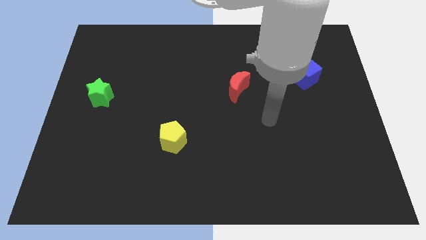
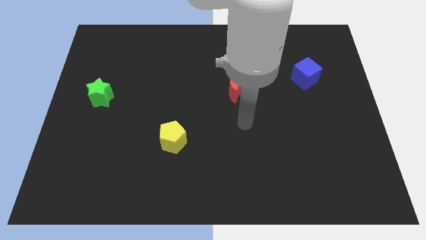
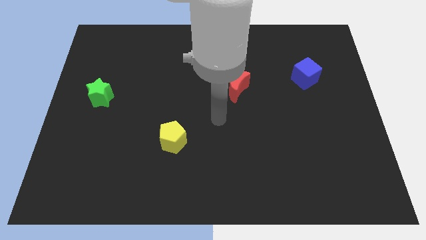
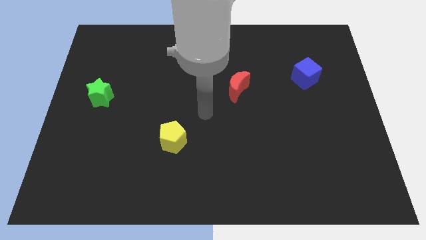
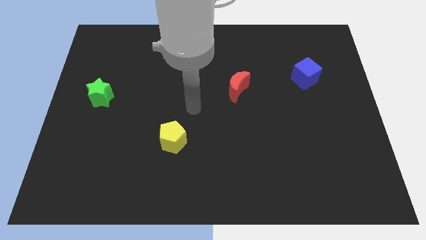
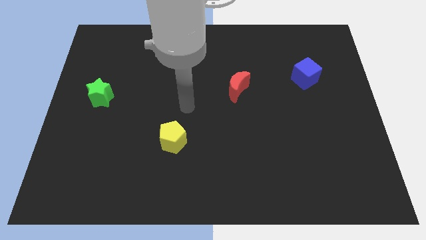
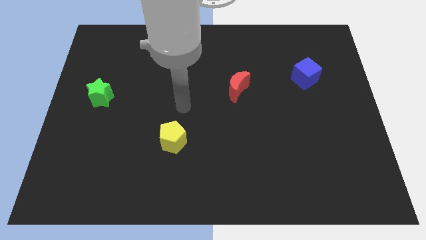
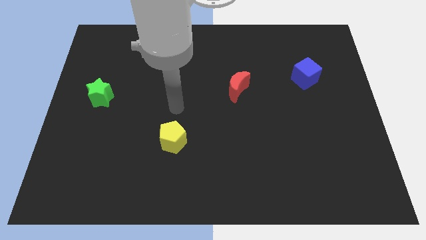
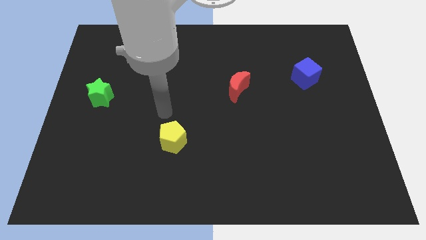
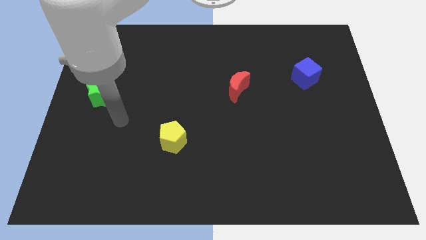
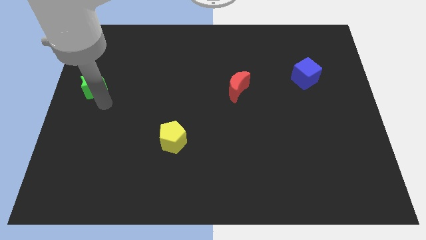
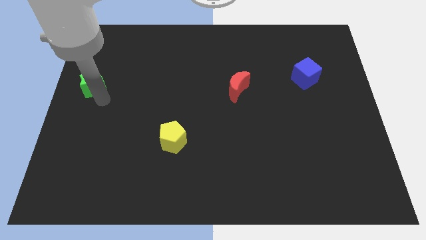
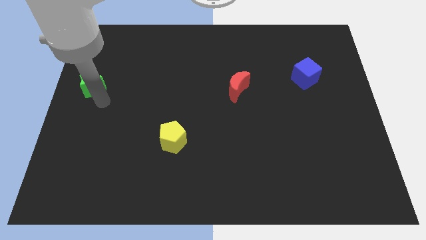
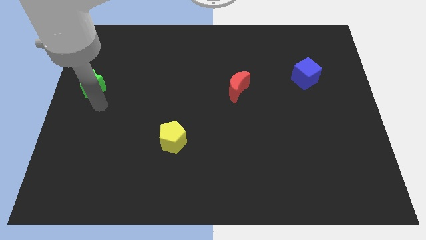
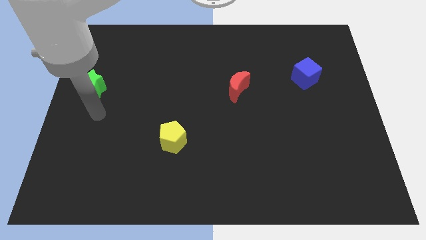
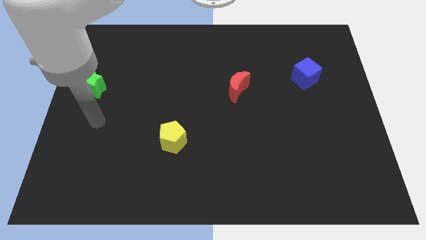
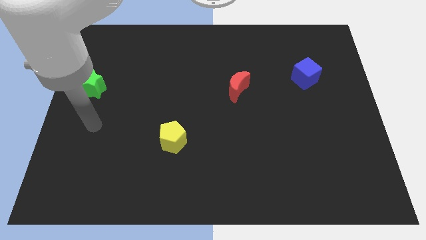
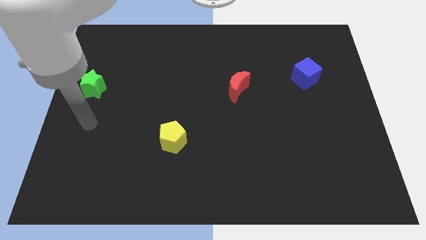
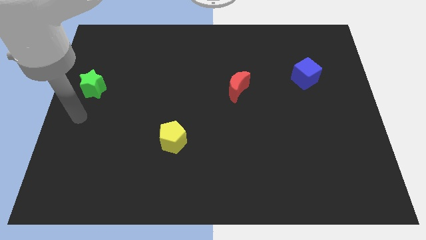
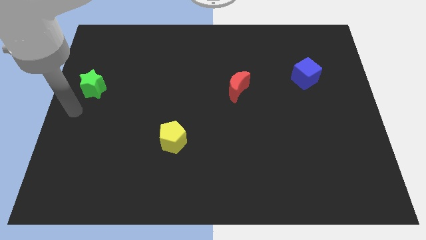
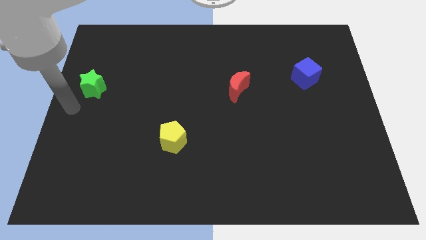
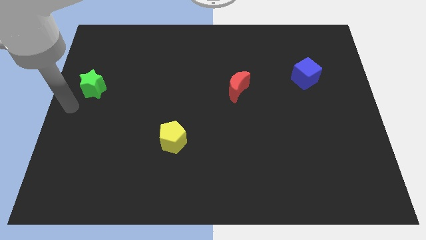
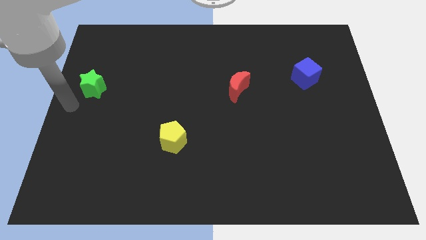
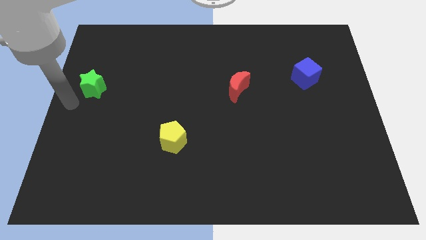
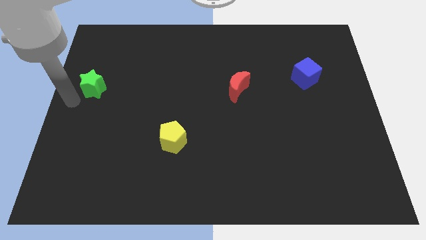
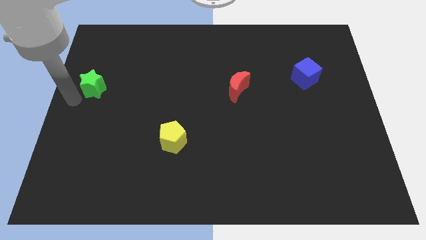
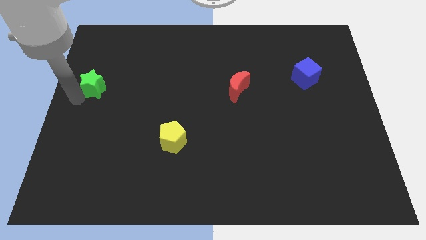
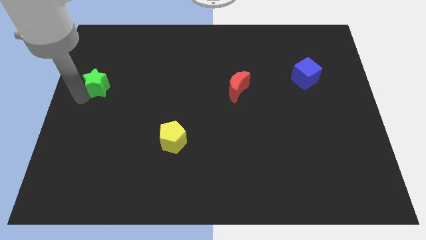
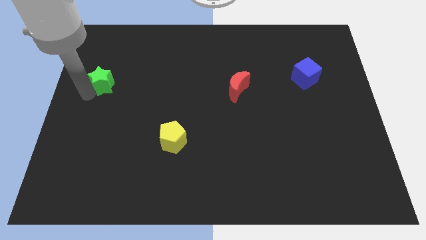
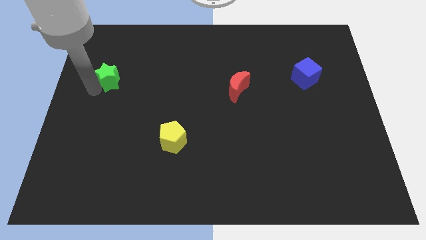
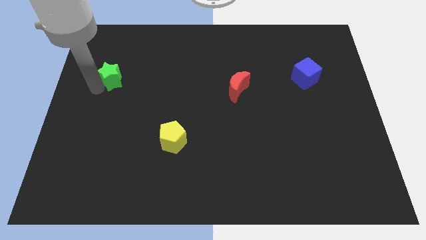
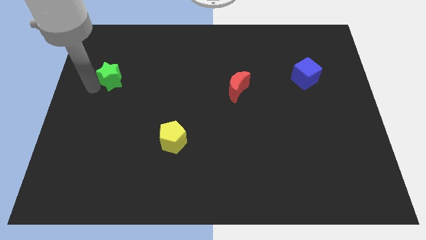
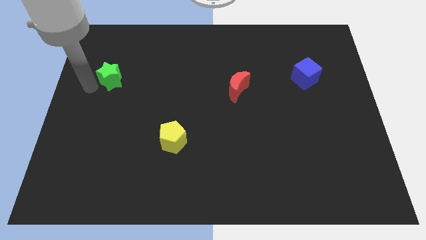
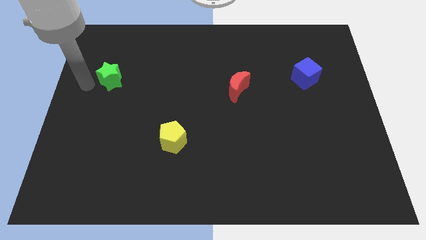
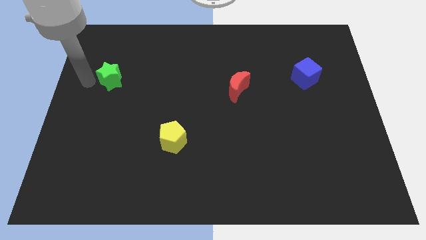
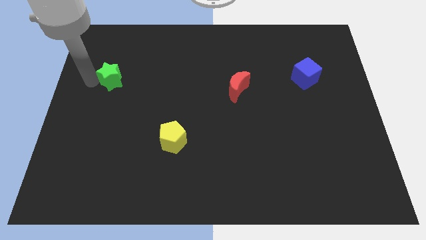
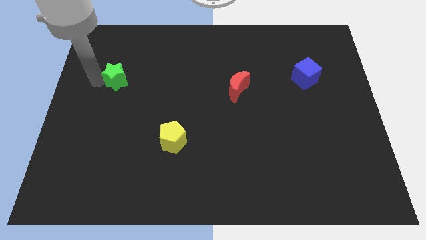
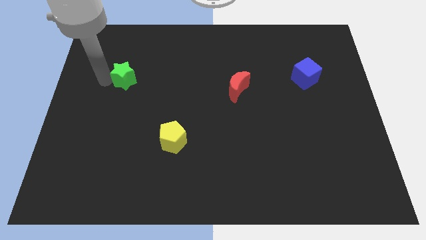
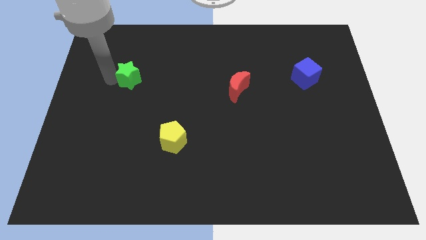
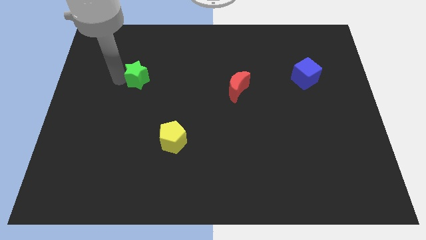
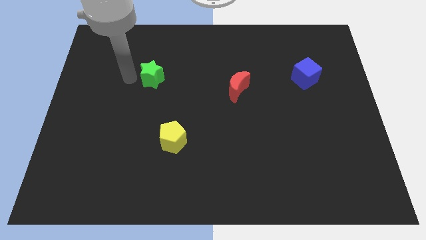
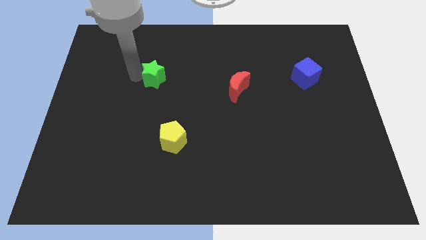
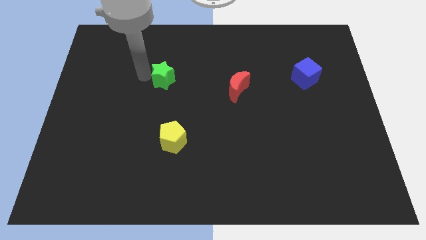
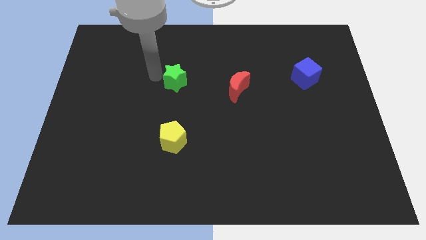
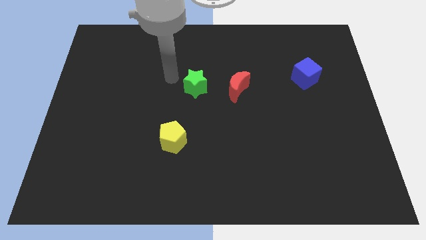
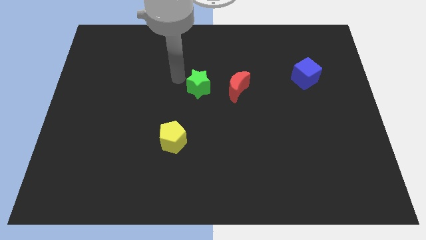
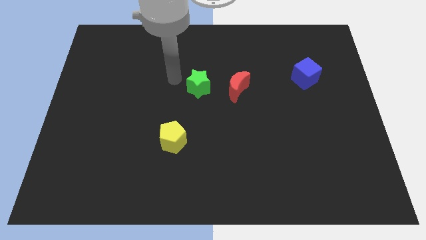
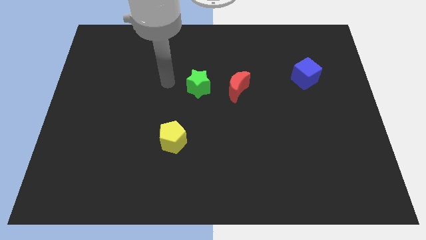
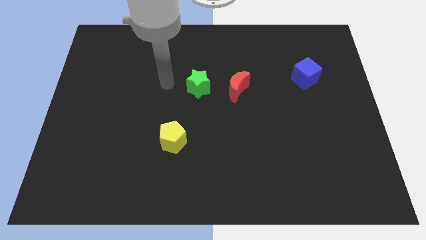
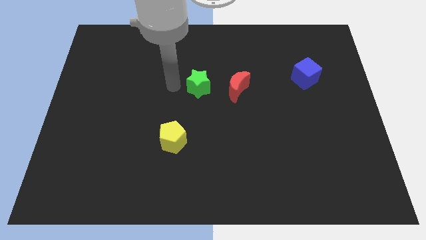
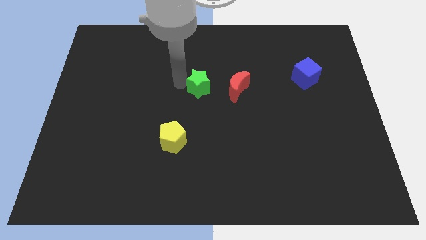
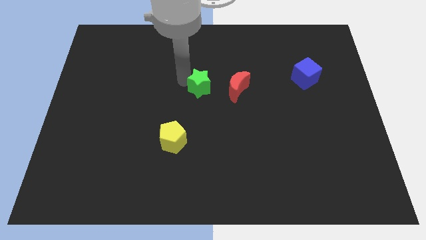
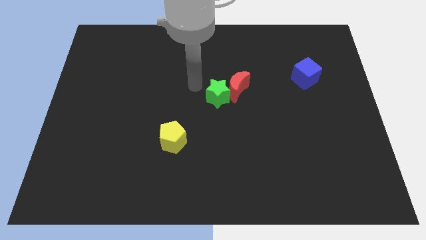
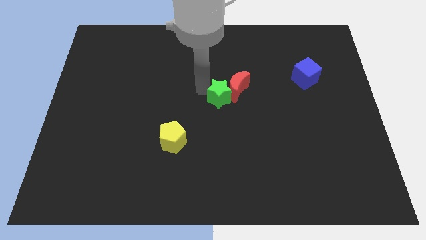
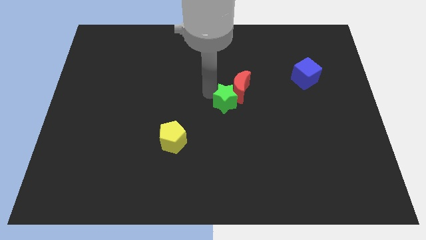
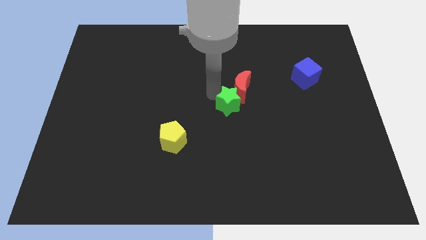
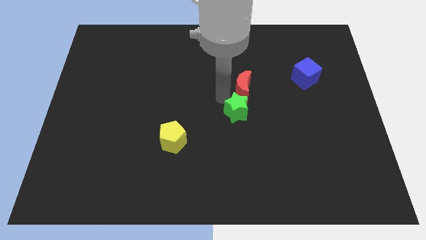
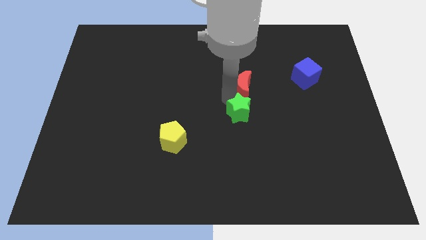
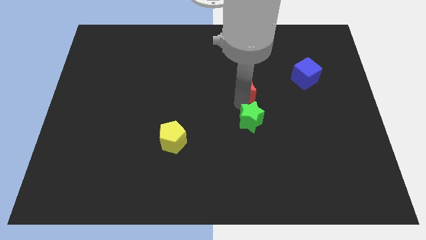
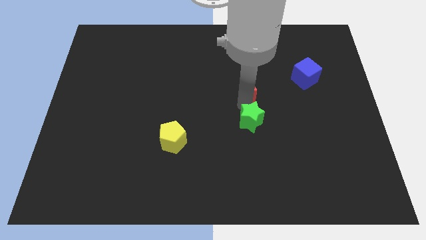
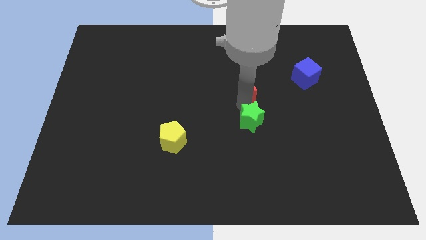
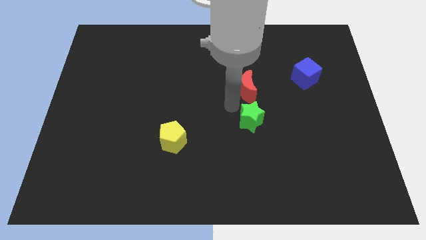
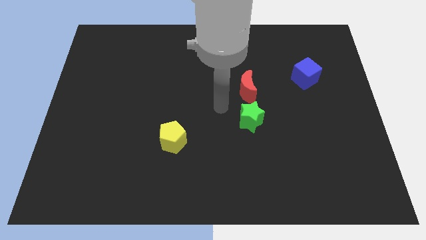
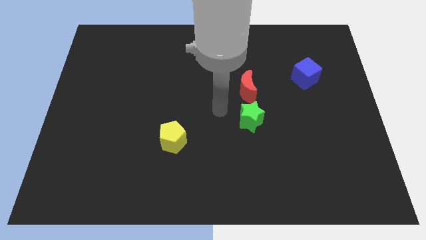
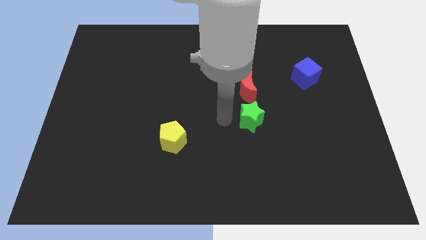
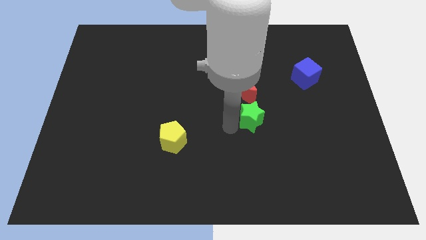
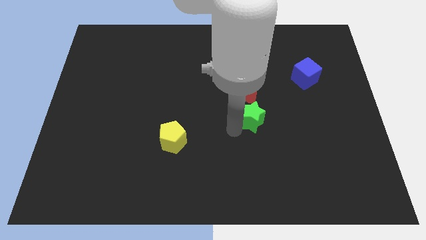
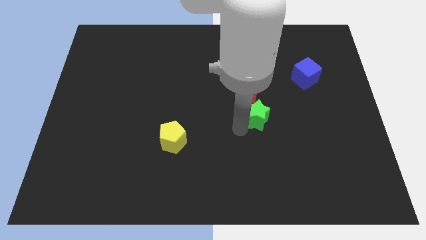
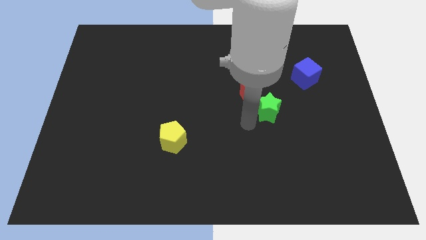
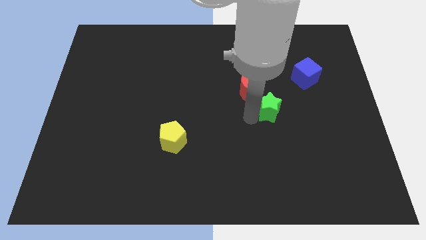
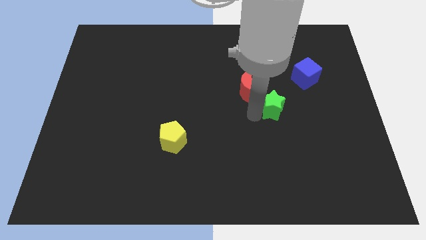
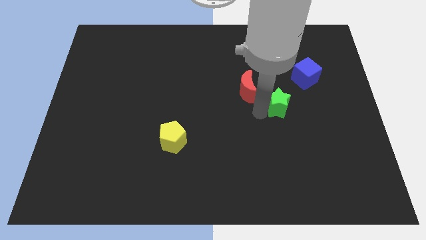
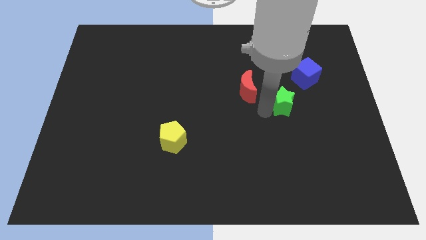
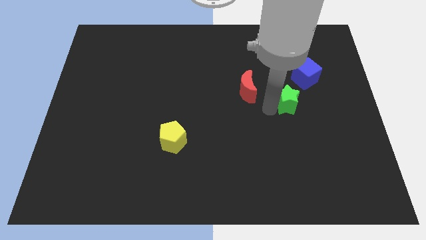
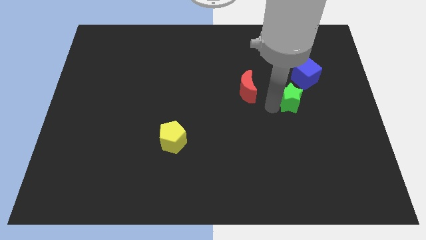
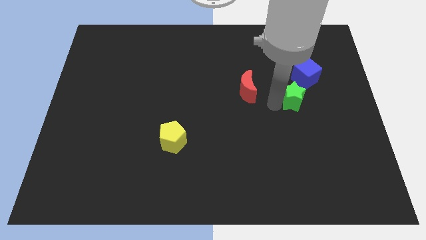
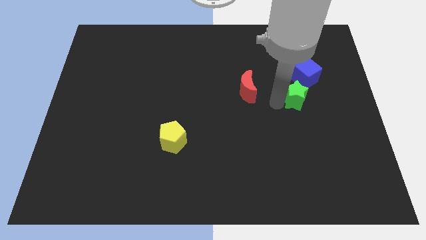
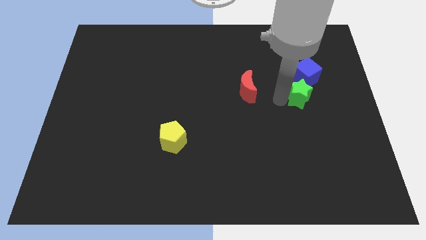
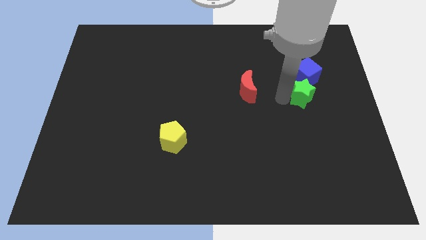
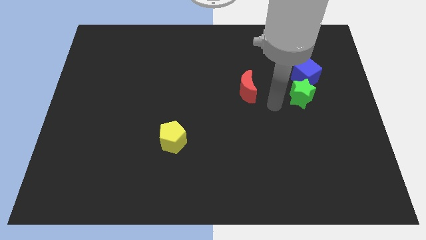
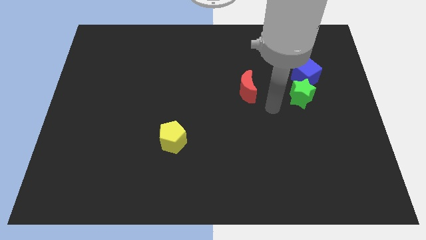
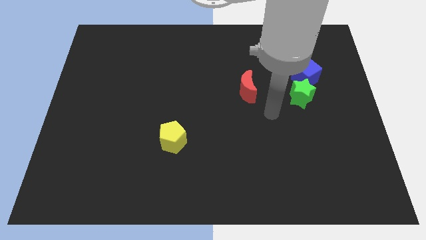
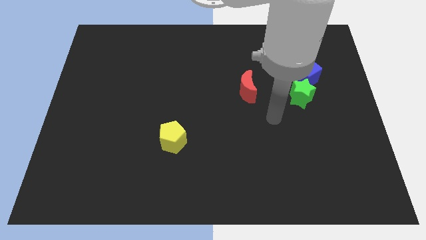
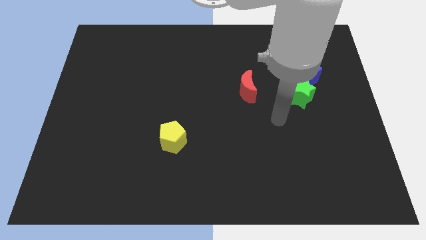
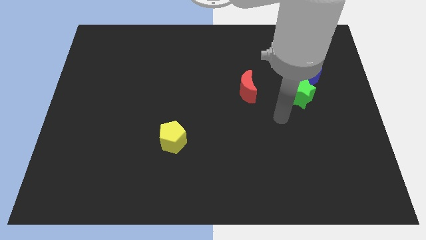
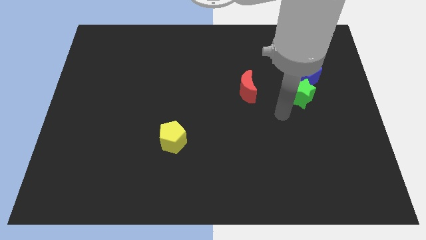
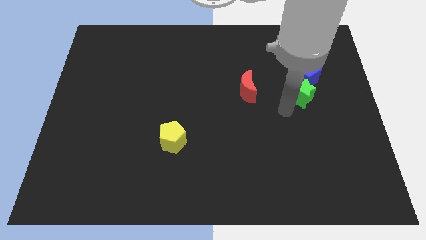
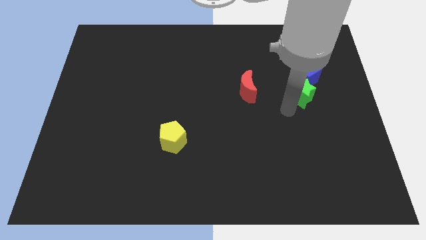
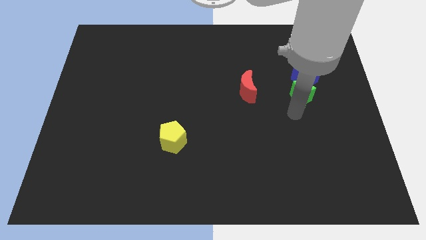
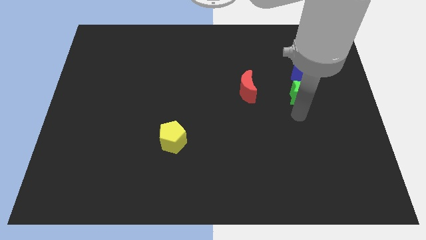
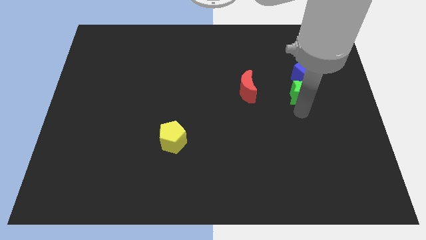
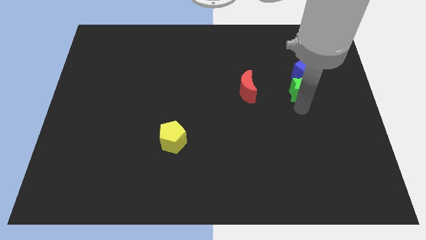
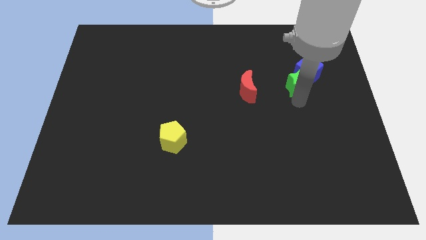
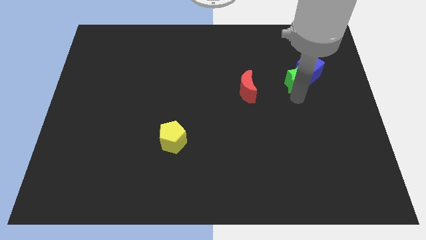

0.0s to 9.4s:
put the green star next to the blue cube
